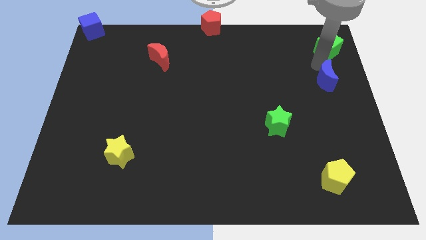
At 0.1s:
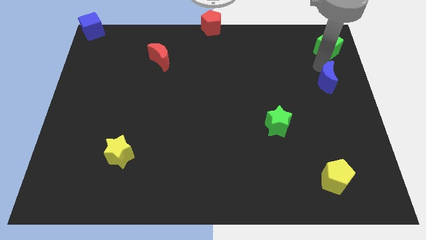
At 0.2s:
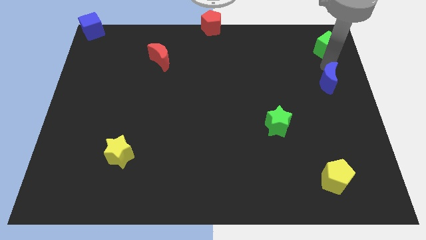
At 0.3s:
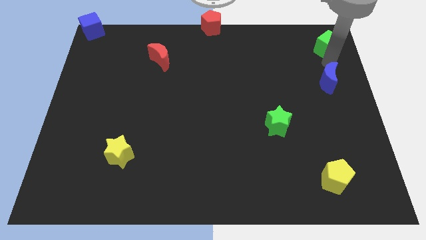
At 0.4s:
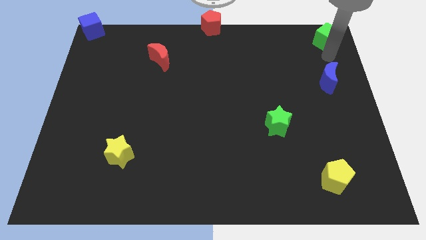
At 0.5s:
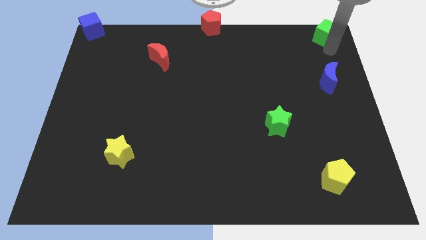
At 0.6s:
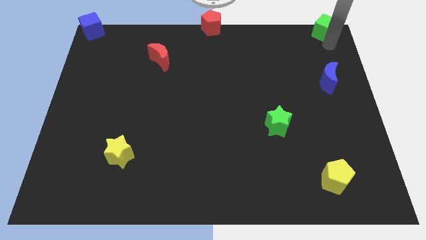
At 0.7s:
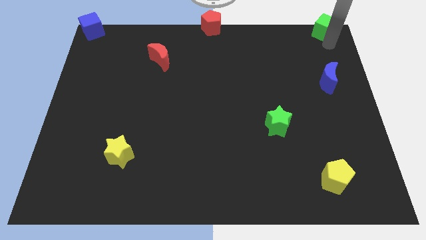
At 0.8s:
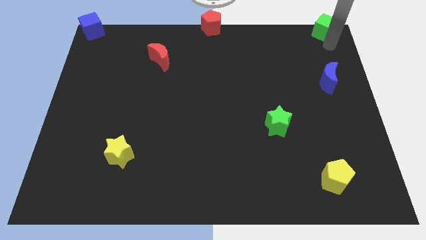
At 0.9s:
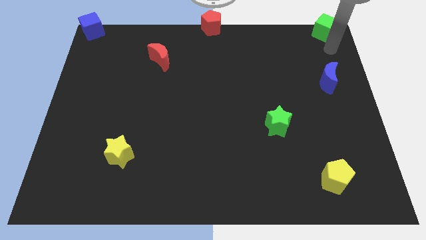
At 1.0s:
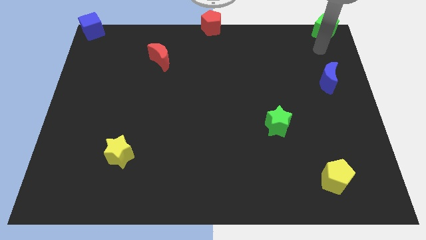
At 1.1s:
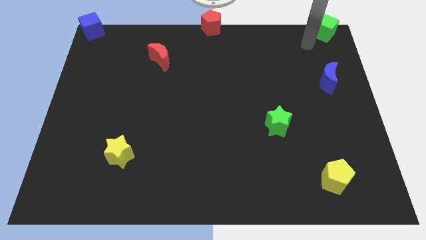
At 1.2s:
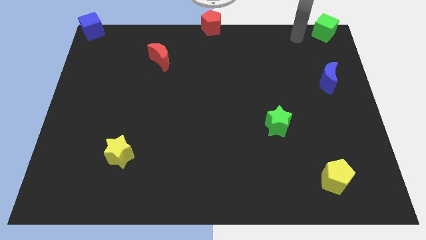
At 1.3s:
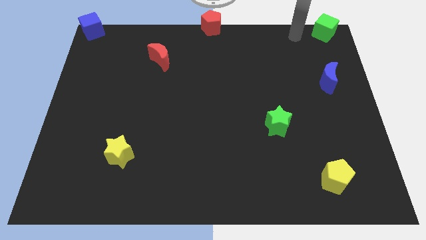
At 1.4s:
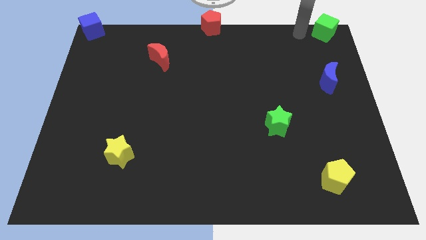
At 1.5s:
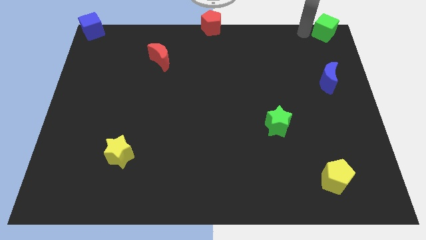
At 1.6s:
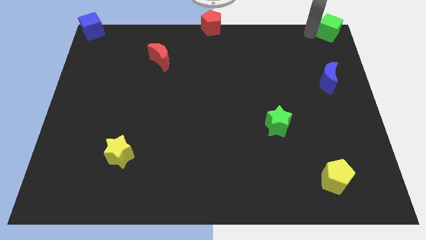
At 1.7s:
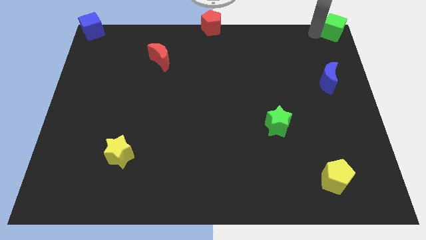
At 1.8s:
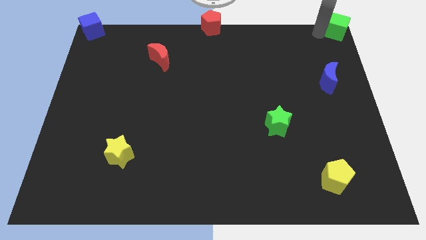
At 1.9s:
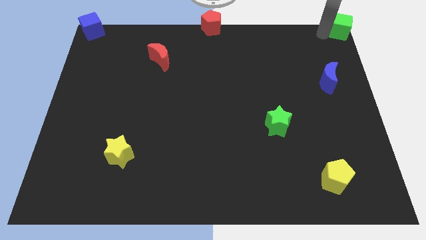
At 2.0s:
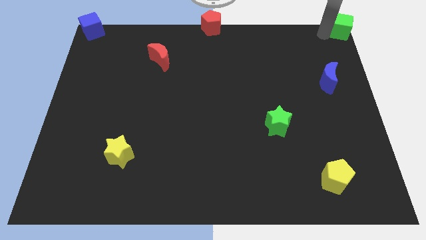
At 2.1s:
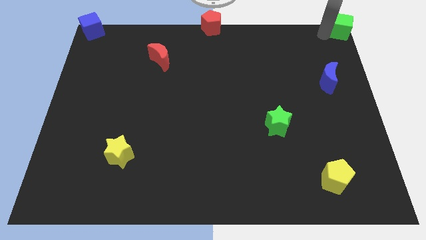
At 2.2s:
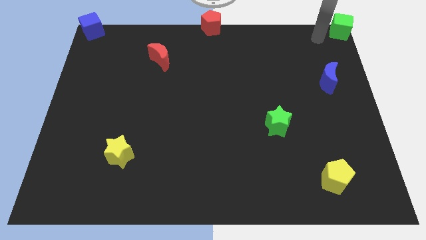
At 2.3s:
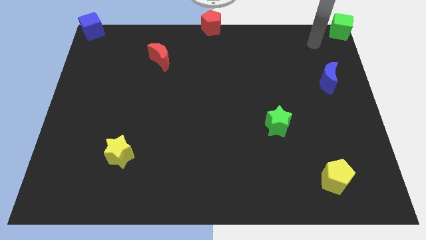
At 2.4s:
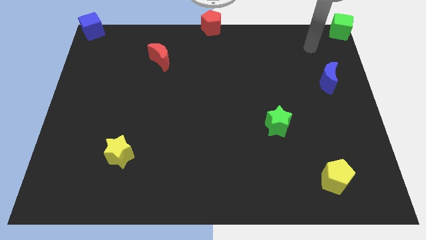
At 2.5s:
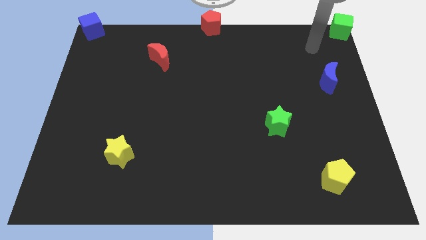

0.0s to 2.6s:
place the green cube to the top corner of the board

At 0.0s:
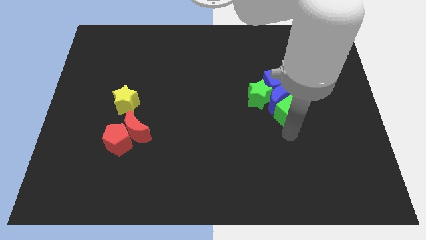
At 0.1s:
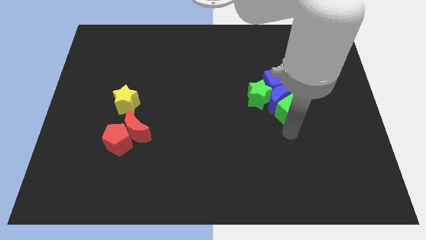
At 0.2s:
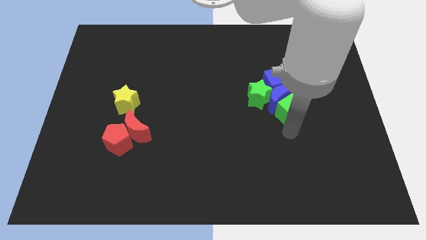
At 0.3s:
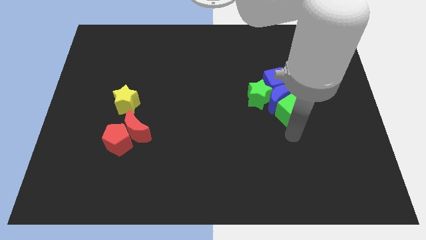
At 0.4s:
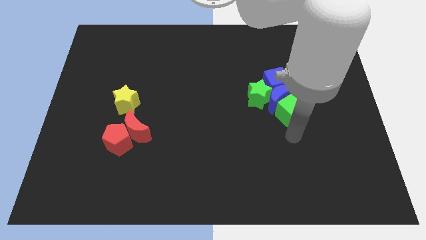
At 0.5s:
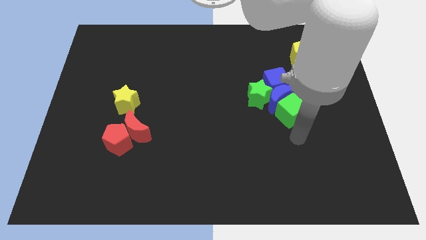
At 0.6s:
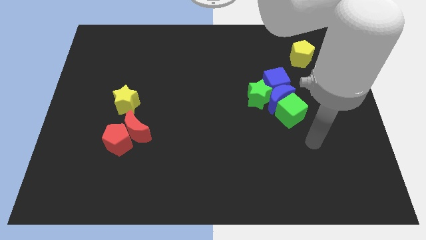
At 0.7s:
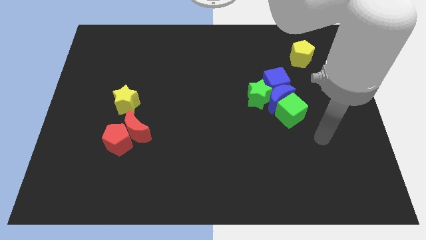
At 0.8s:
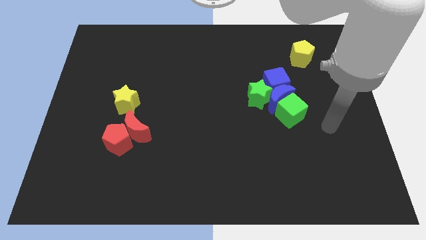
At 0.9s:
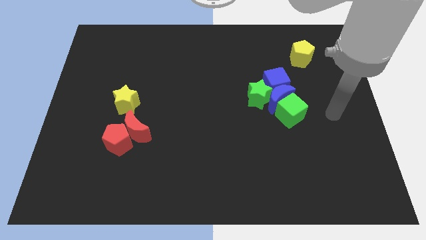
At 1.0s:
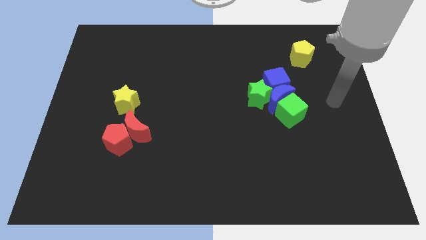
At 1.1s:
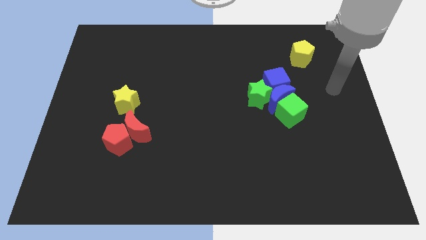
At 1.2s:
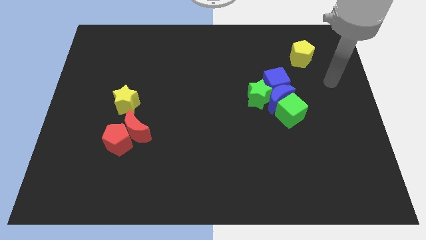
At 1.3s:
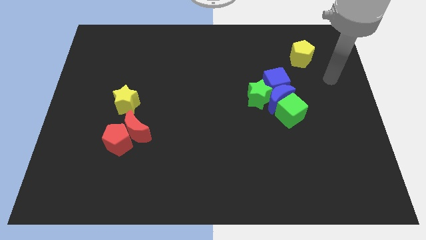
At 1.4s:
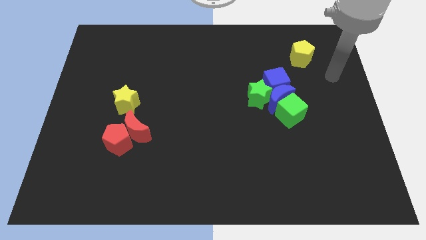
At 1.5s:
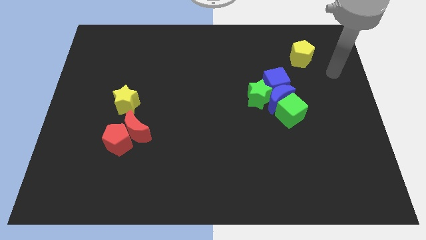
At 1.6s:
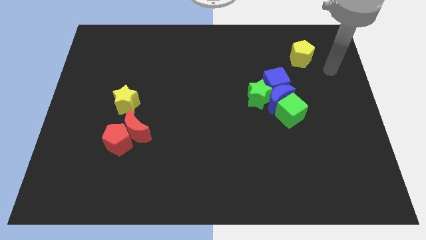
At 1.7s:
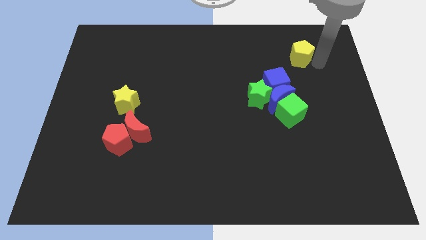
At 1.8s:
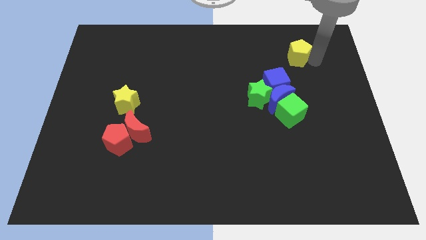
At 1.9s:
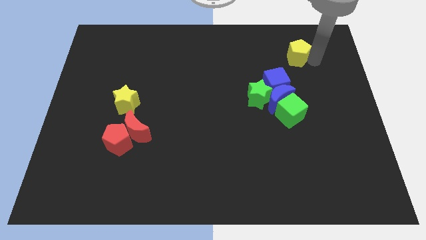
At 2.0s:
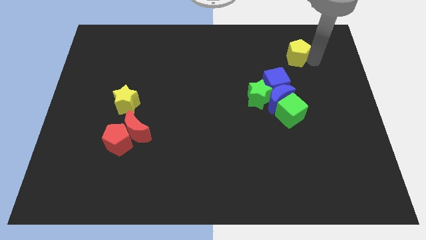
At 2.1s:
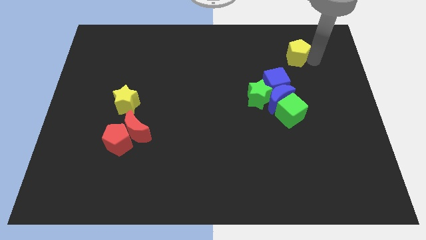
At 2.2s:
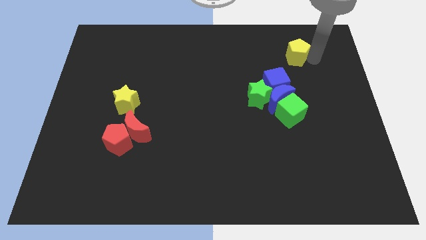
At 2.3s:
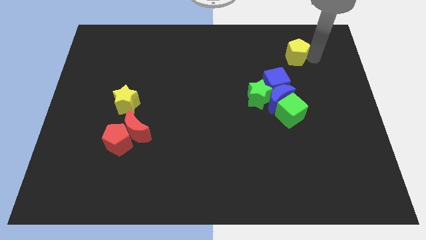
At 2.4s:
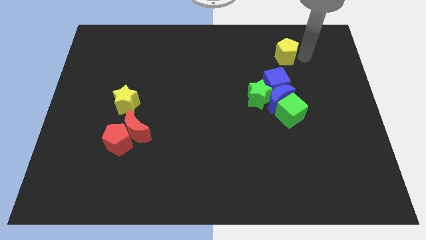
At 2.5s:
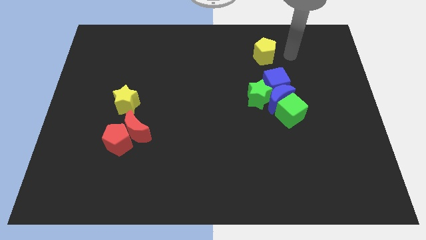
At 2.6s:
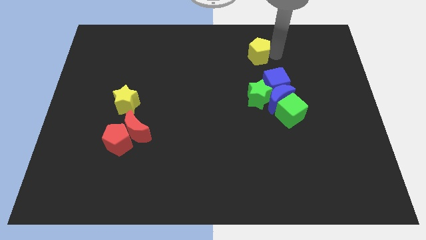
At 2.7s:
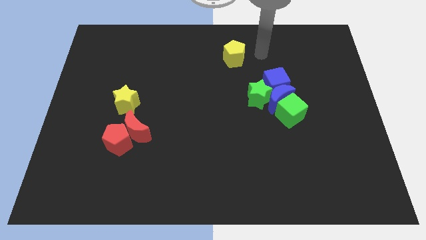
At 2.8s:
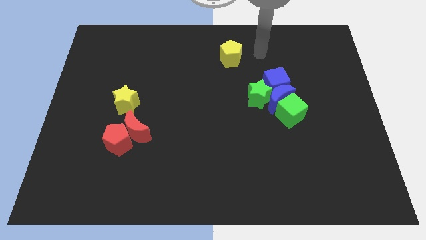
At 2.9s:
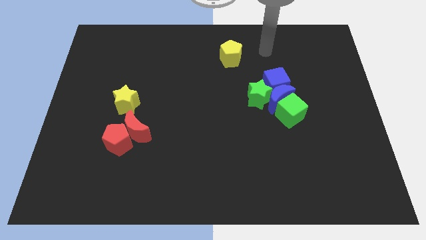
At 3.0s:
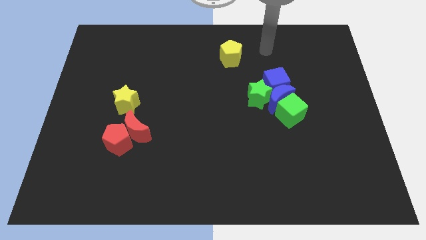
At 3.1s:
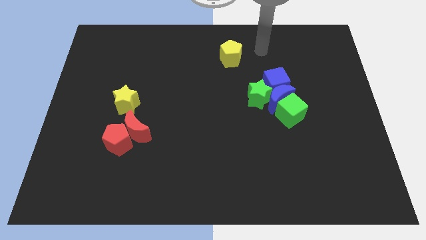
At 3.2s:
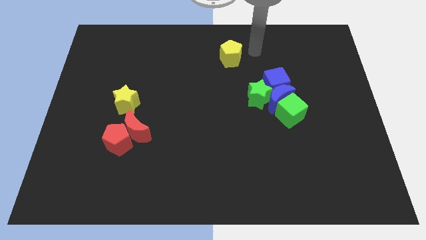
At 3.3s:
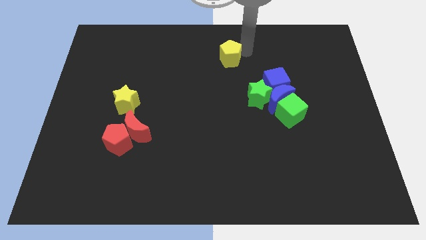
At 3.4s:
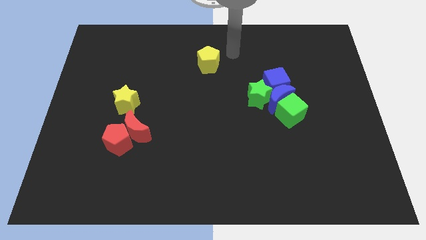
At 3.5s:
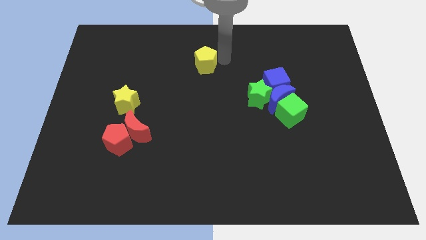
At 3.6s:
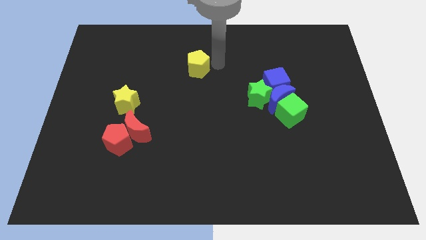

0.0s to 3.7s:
move the yellow pentagon diagonally to the top left of the yellow star

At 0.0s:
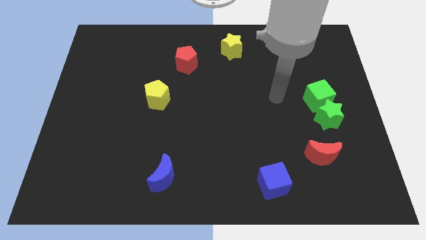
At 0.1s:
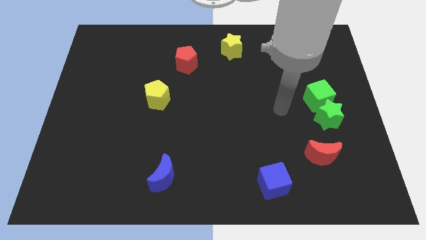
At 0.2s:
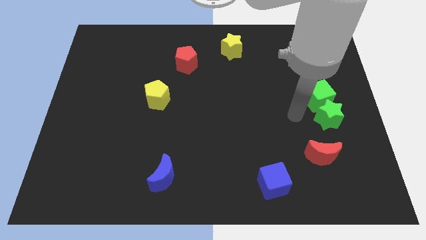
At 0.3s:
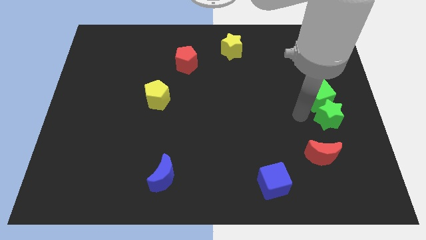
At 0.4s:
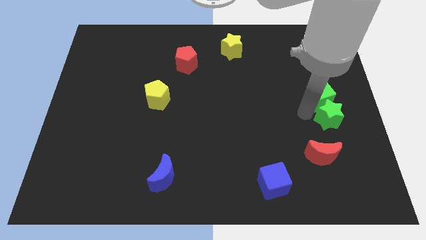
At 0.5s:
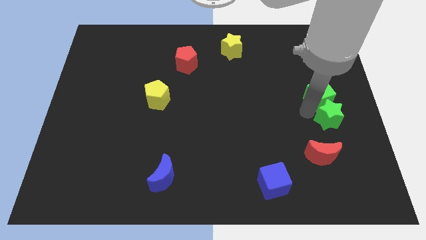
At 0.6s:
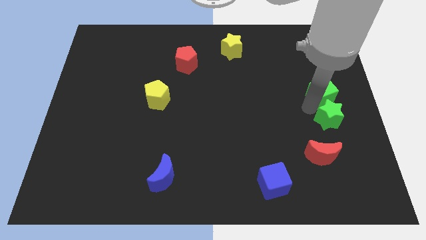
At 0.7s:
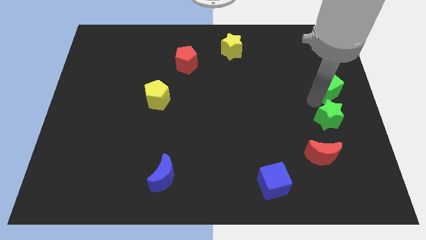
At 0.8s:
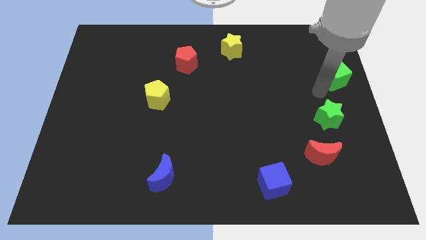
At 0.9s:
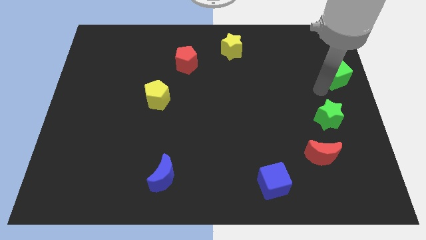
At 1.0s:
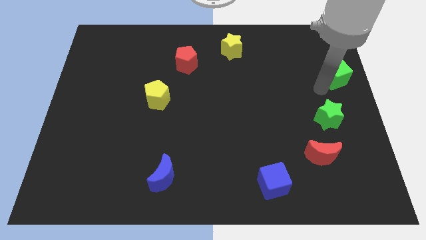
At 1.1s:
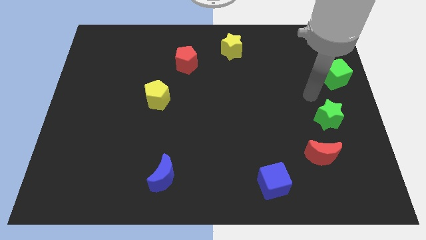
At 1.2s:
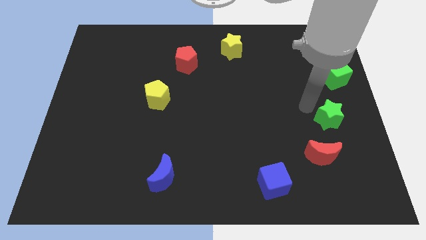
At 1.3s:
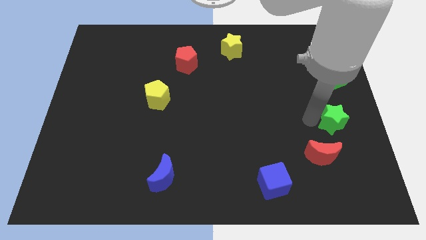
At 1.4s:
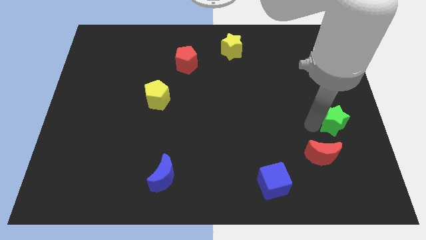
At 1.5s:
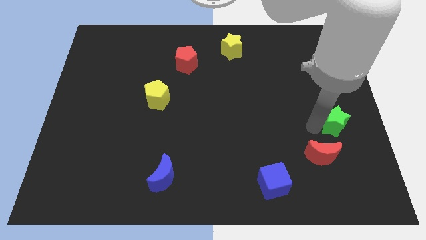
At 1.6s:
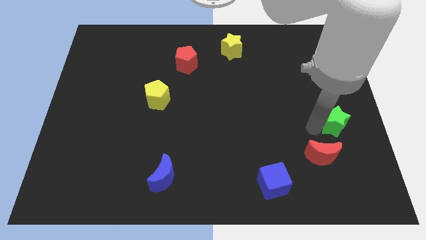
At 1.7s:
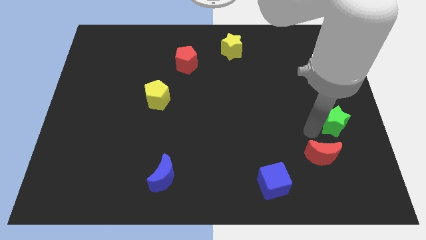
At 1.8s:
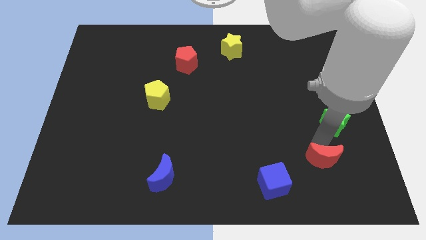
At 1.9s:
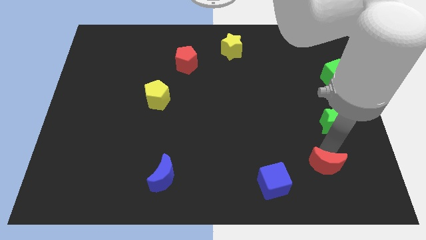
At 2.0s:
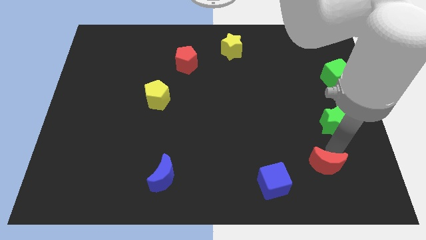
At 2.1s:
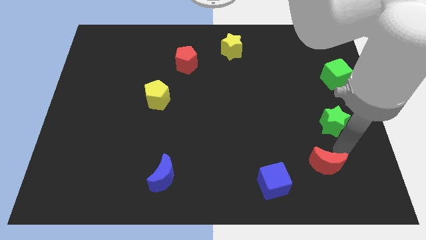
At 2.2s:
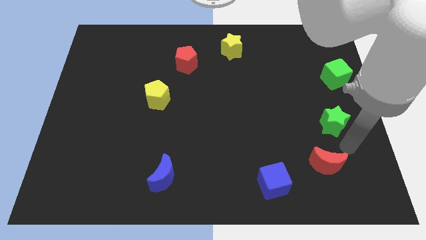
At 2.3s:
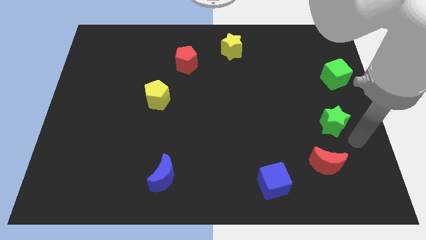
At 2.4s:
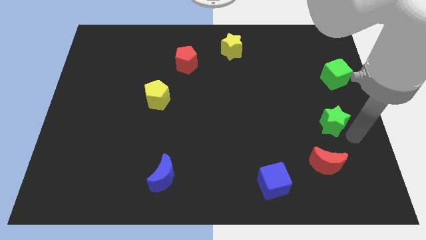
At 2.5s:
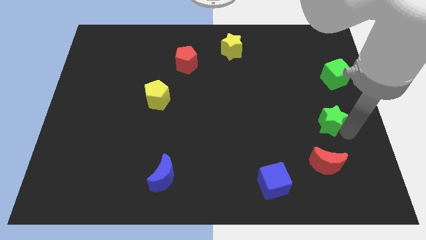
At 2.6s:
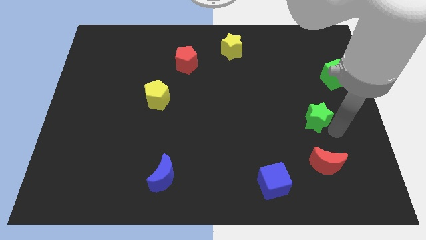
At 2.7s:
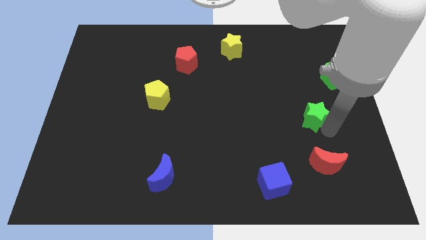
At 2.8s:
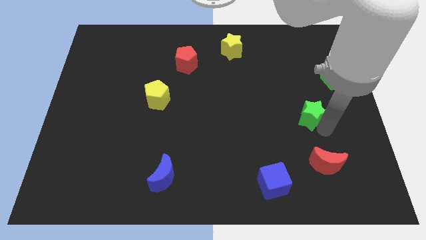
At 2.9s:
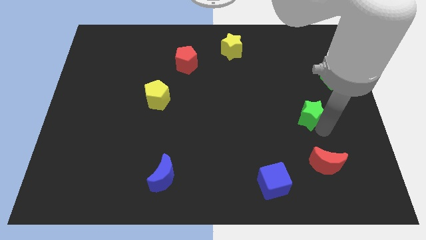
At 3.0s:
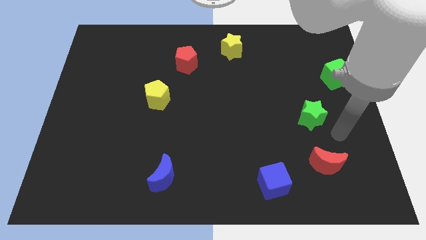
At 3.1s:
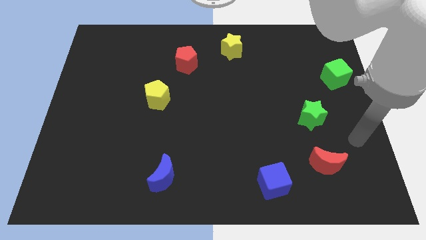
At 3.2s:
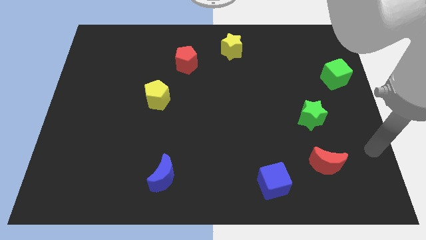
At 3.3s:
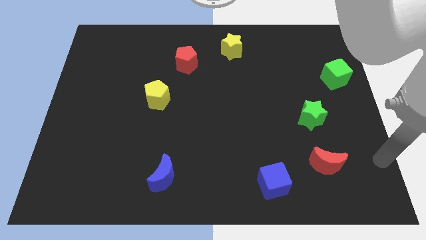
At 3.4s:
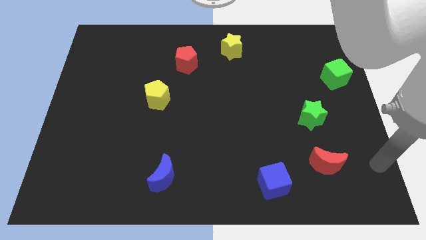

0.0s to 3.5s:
separate the green blocks
